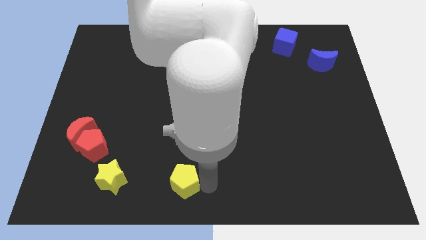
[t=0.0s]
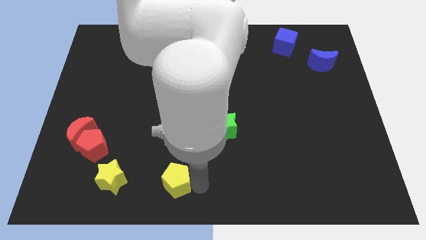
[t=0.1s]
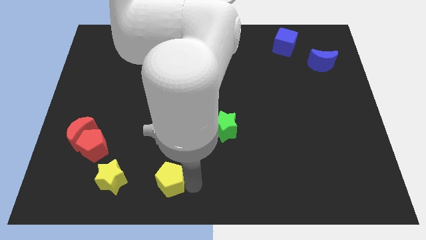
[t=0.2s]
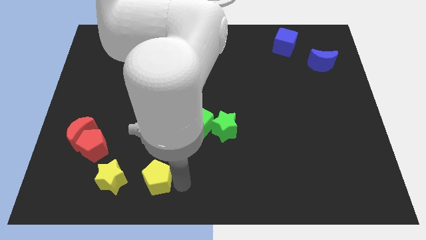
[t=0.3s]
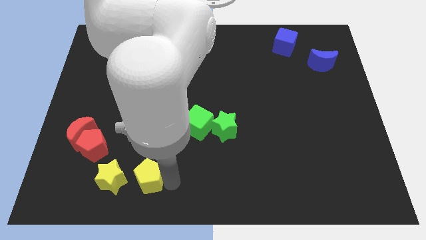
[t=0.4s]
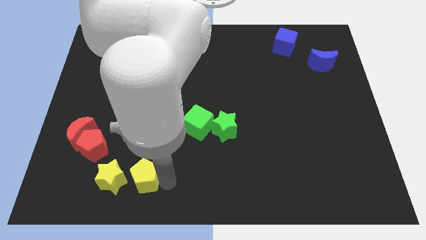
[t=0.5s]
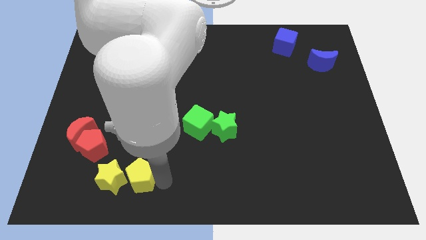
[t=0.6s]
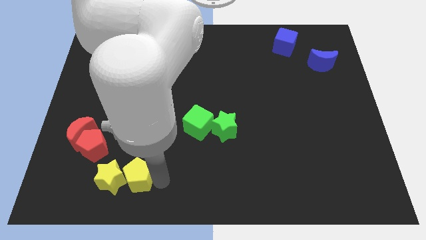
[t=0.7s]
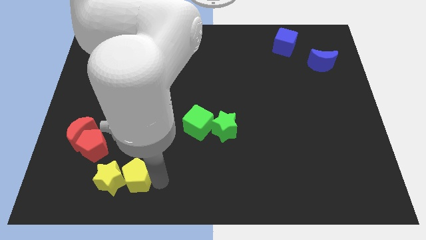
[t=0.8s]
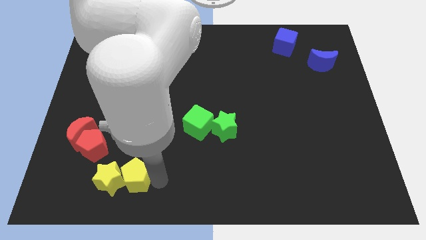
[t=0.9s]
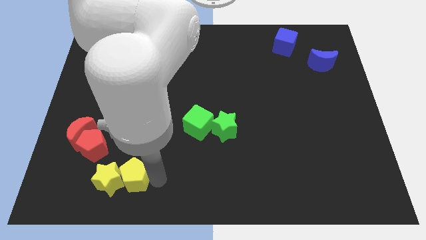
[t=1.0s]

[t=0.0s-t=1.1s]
push the yellow pentagon into yellow star

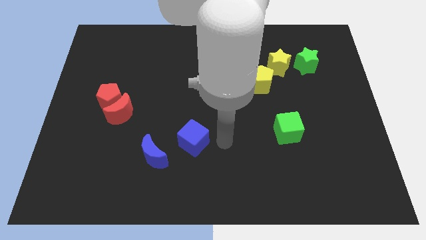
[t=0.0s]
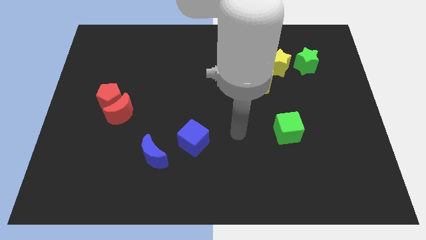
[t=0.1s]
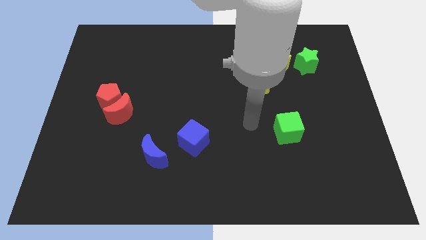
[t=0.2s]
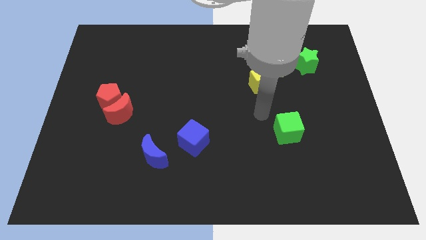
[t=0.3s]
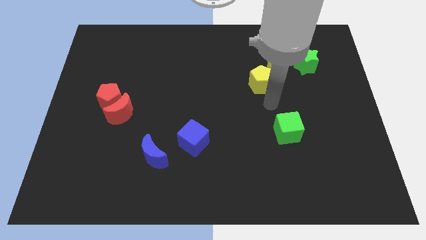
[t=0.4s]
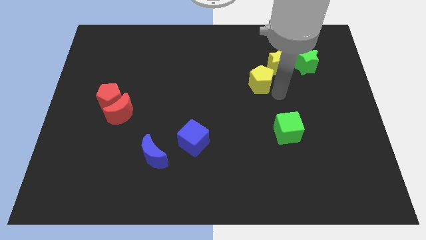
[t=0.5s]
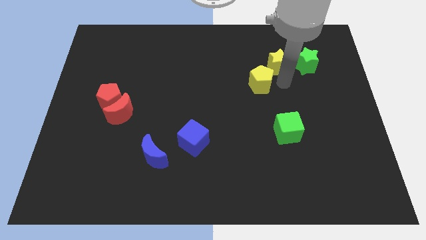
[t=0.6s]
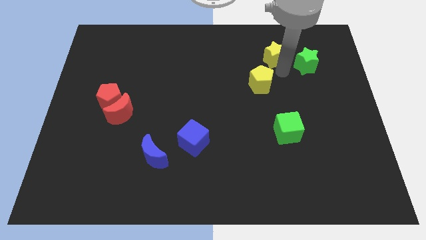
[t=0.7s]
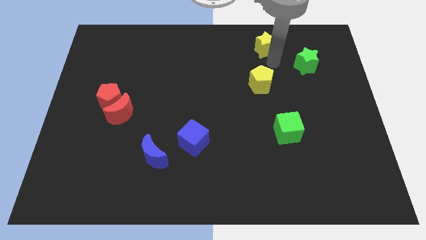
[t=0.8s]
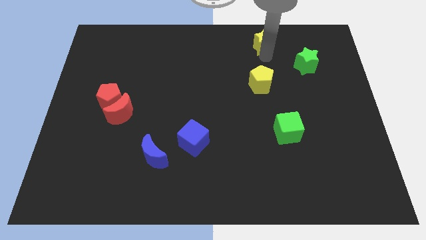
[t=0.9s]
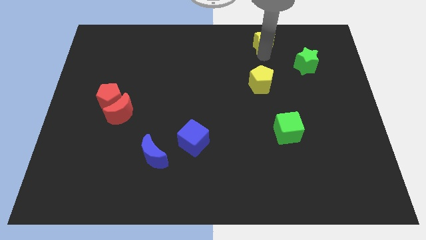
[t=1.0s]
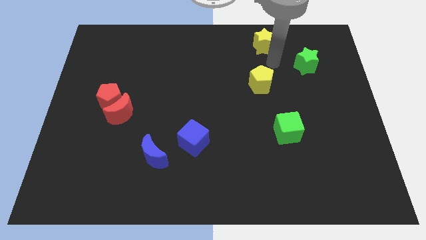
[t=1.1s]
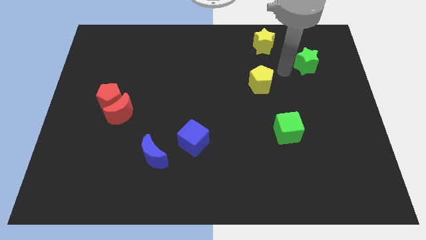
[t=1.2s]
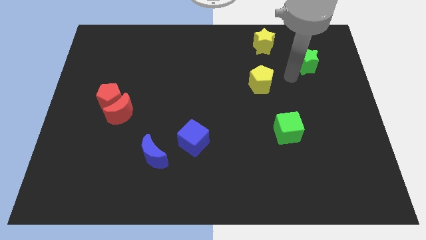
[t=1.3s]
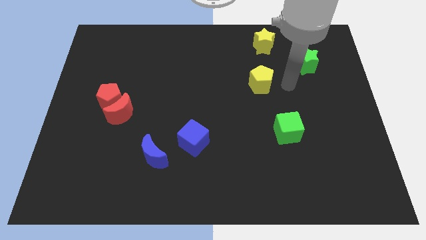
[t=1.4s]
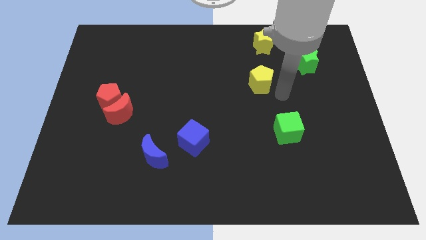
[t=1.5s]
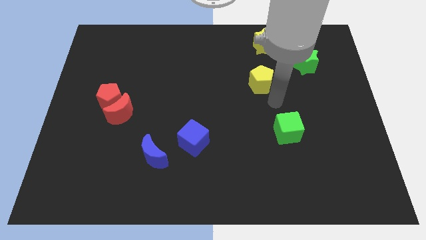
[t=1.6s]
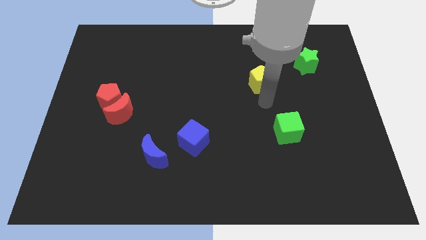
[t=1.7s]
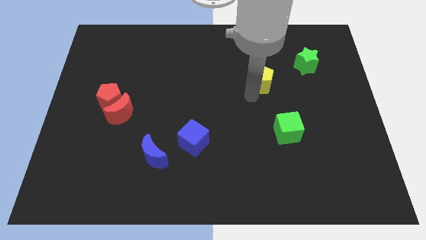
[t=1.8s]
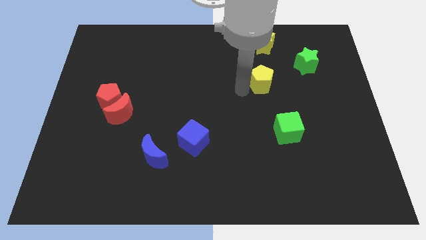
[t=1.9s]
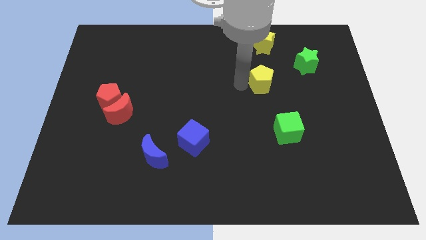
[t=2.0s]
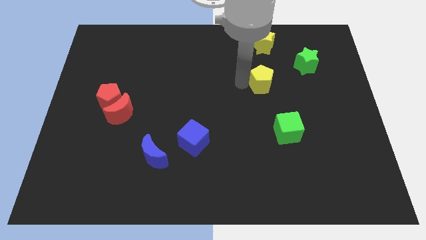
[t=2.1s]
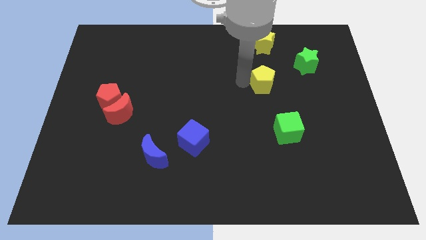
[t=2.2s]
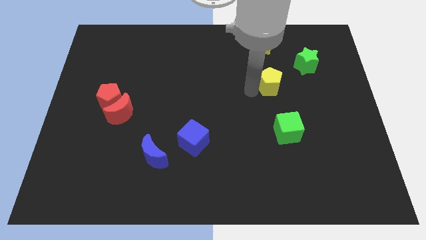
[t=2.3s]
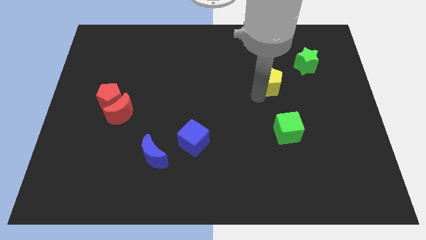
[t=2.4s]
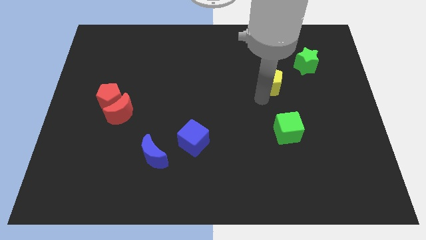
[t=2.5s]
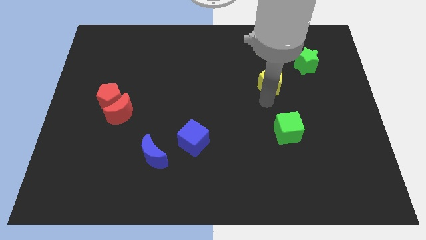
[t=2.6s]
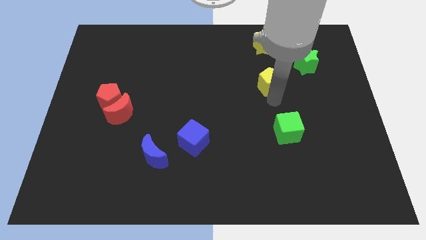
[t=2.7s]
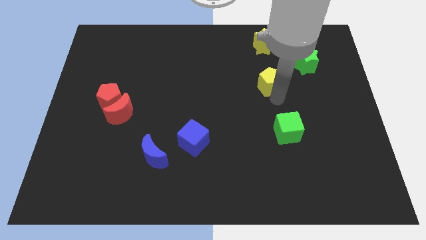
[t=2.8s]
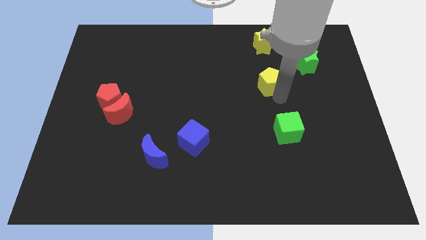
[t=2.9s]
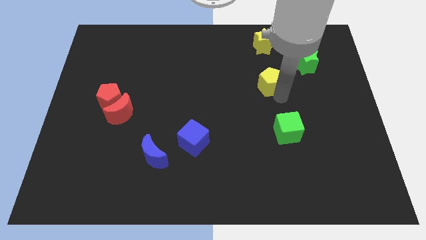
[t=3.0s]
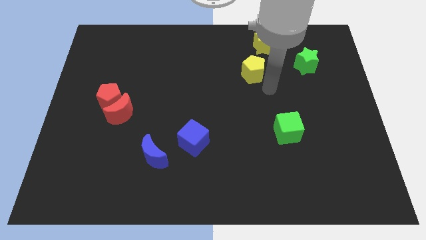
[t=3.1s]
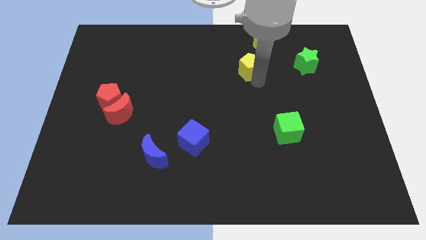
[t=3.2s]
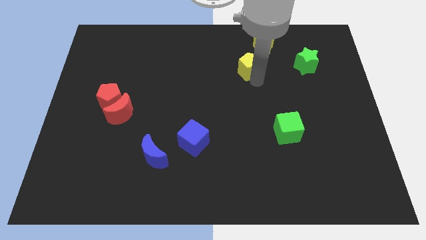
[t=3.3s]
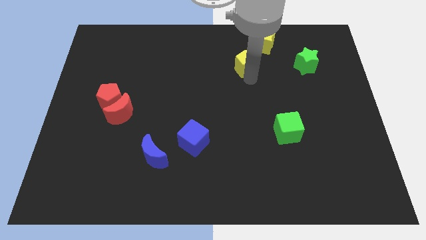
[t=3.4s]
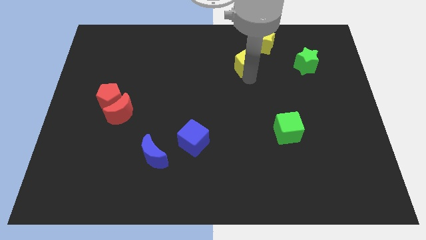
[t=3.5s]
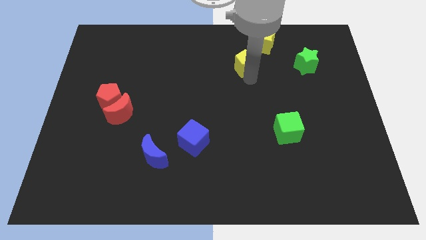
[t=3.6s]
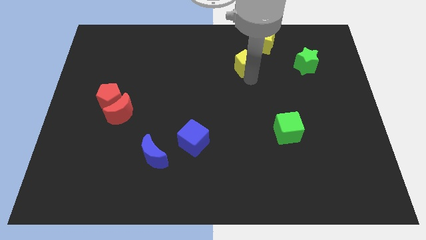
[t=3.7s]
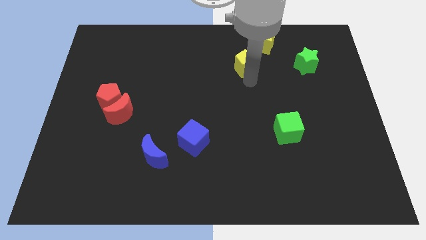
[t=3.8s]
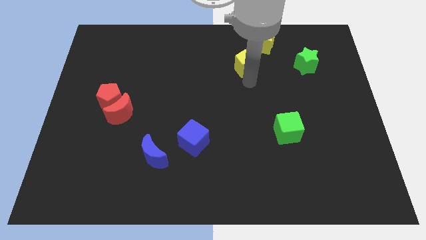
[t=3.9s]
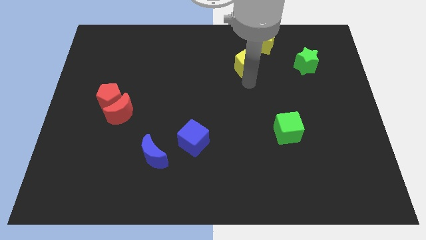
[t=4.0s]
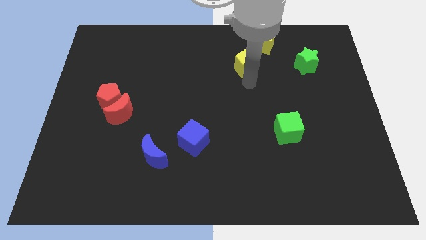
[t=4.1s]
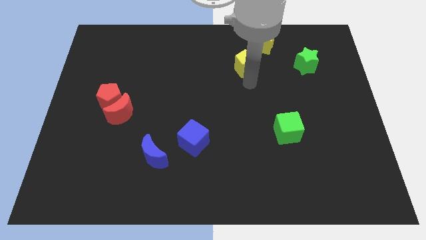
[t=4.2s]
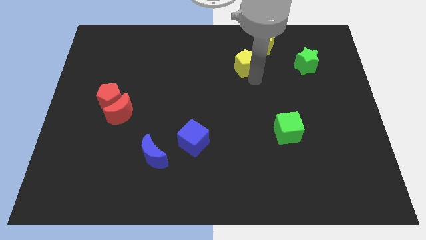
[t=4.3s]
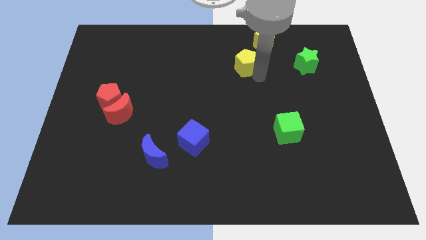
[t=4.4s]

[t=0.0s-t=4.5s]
push the yellow star and yellow pentagon slightly to the top side of the board

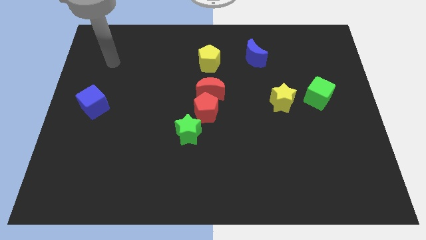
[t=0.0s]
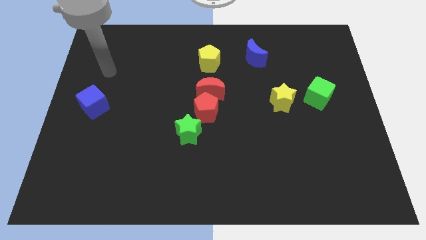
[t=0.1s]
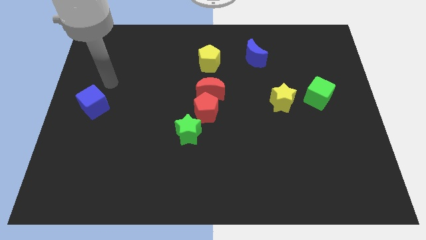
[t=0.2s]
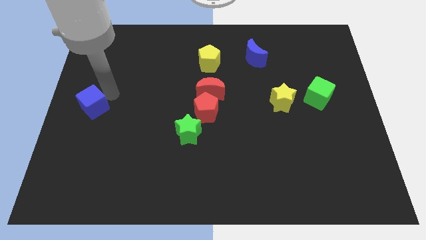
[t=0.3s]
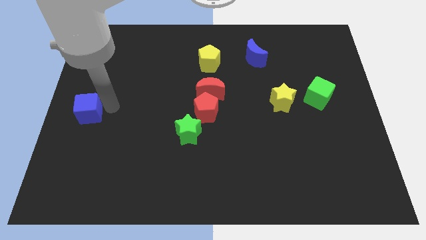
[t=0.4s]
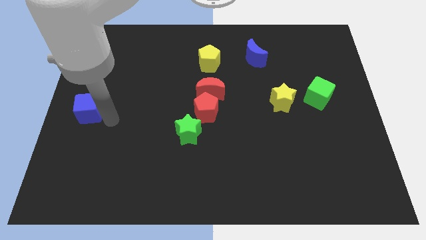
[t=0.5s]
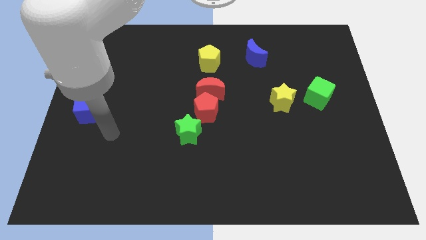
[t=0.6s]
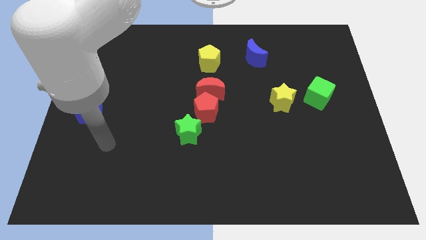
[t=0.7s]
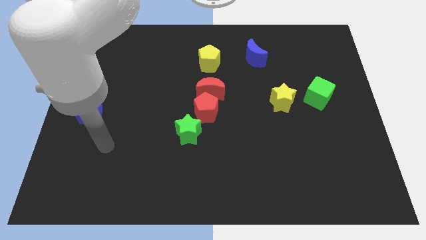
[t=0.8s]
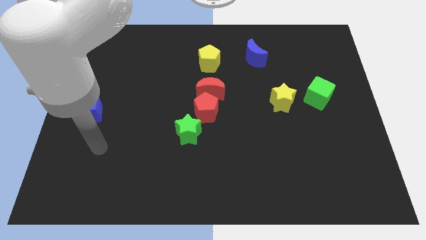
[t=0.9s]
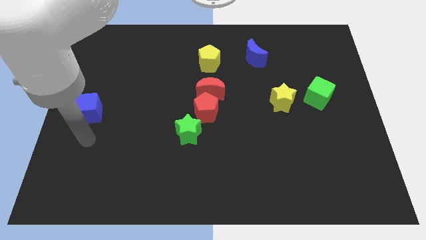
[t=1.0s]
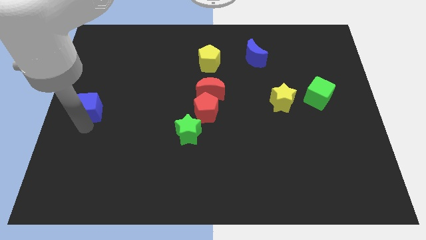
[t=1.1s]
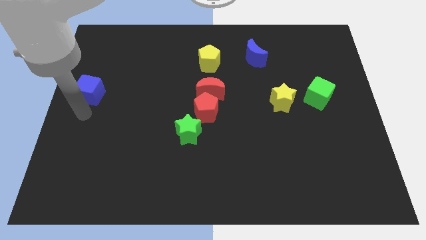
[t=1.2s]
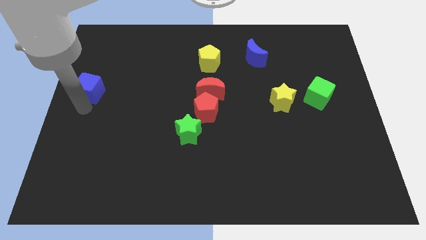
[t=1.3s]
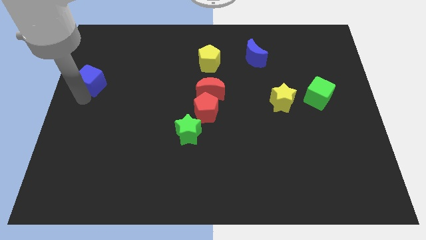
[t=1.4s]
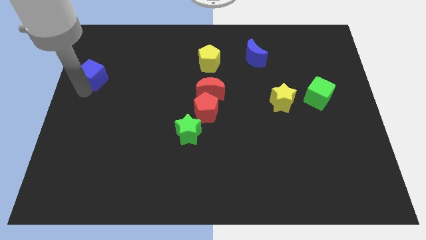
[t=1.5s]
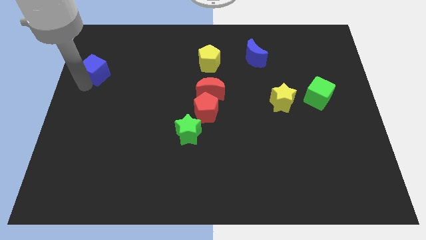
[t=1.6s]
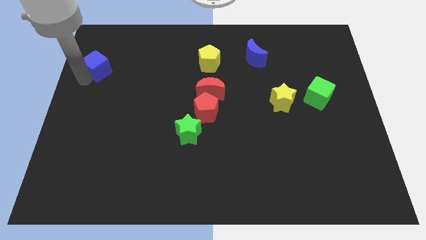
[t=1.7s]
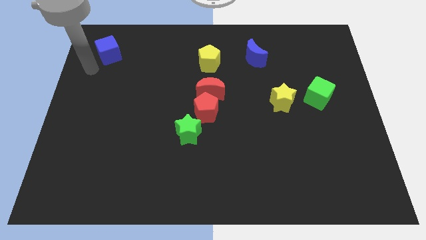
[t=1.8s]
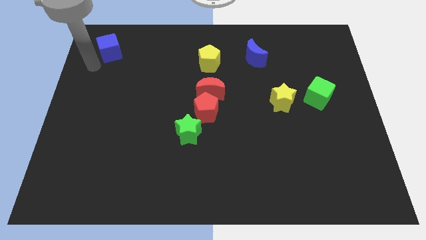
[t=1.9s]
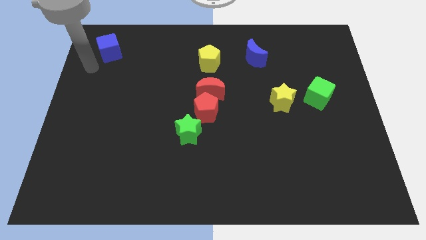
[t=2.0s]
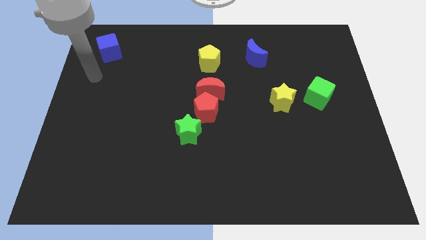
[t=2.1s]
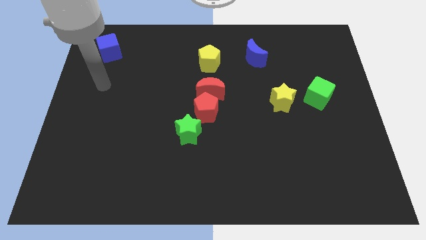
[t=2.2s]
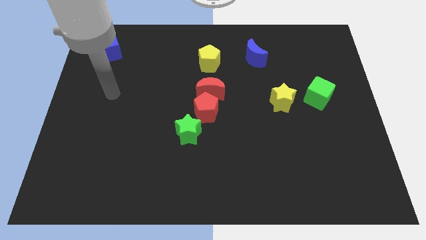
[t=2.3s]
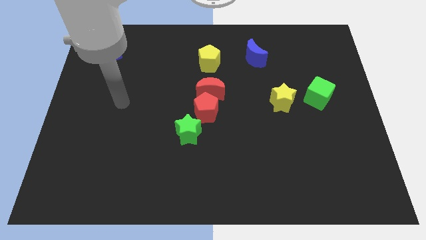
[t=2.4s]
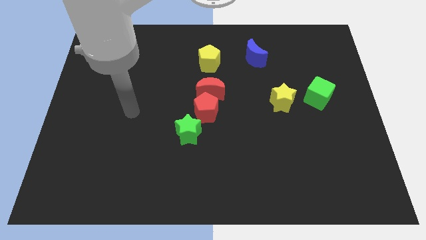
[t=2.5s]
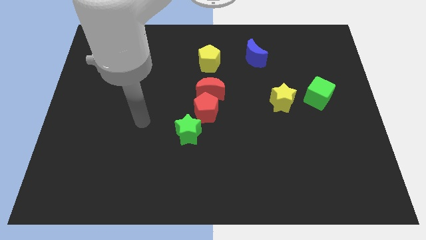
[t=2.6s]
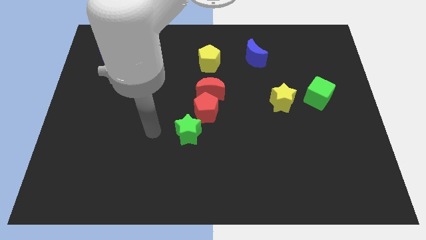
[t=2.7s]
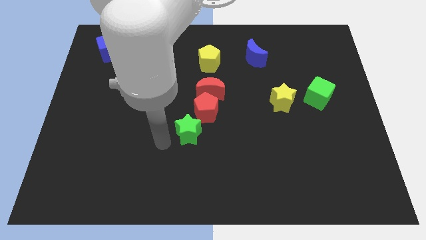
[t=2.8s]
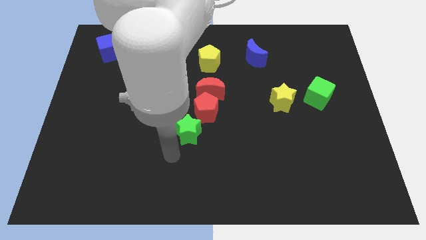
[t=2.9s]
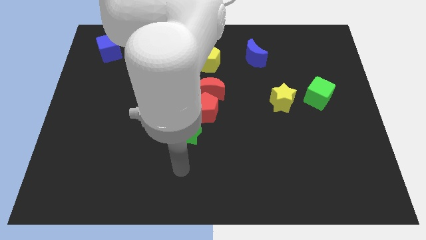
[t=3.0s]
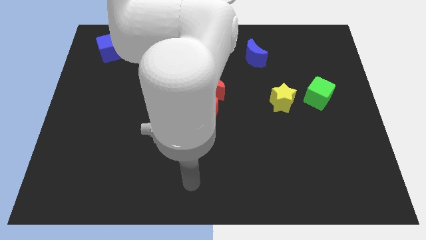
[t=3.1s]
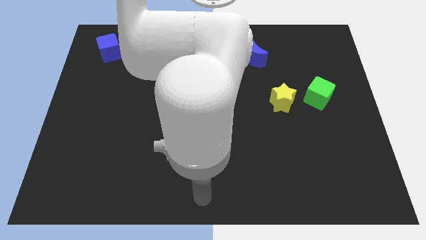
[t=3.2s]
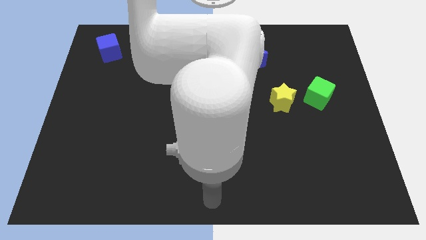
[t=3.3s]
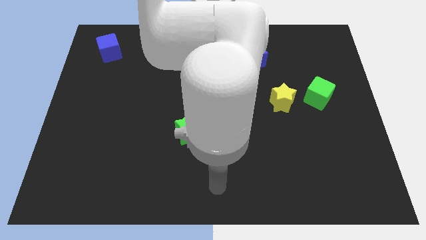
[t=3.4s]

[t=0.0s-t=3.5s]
move the blue cube to the top left of the board
